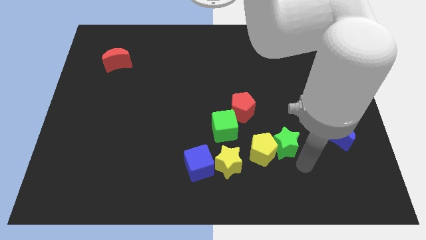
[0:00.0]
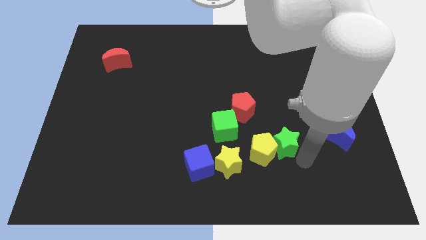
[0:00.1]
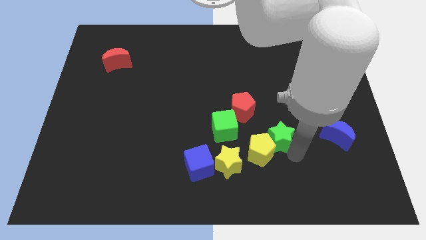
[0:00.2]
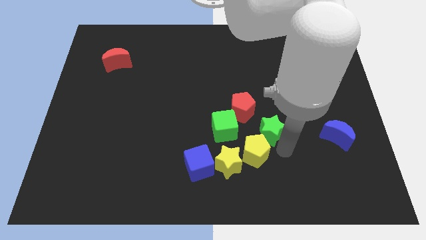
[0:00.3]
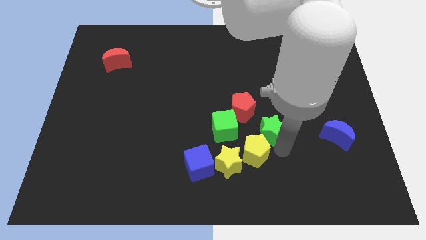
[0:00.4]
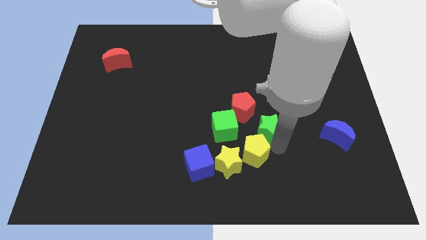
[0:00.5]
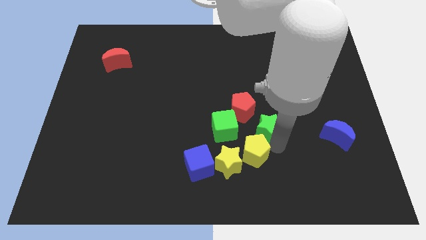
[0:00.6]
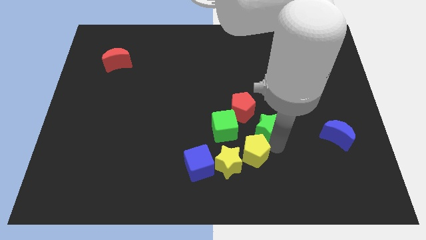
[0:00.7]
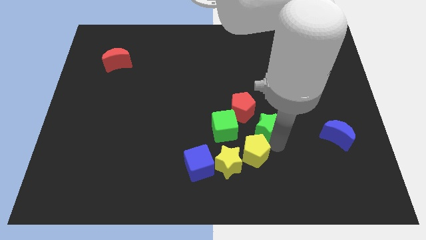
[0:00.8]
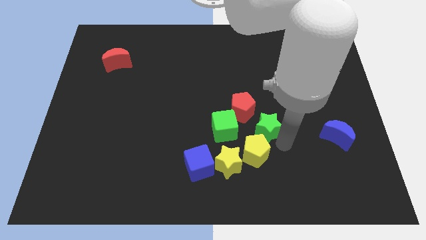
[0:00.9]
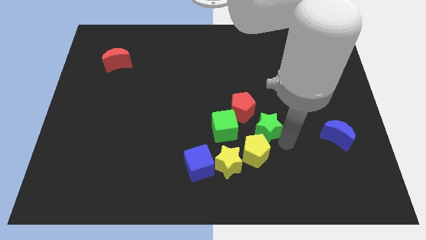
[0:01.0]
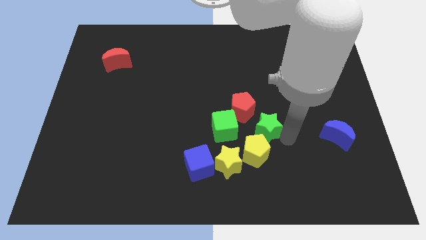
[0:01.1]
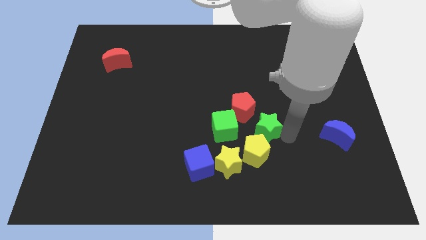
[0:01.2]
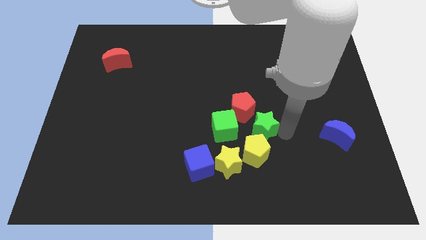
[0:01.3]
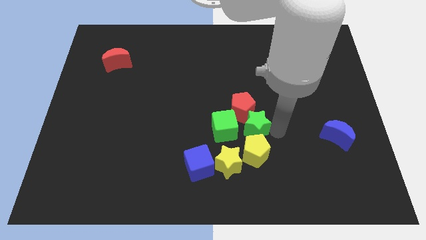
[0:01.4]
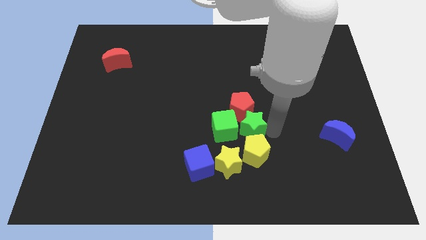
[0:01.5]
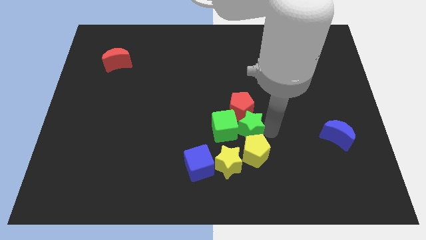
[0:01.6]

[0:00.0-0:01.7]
push the green star into red pentagon

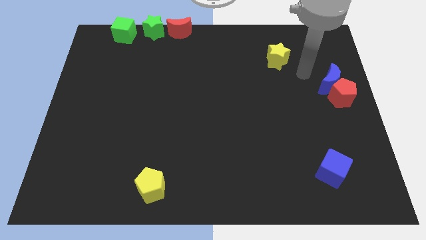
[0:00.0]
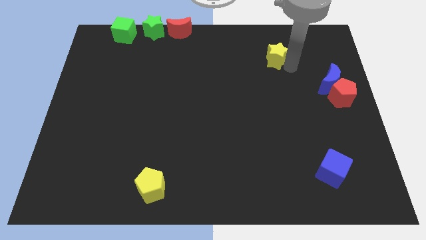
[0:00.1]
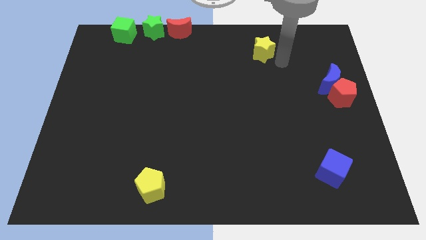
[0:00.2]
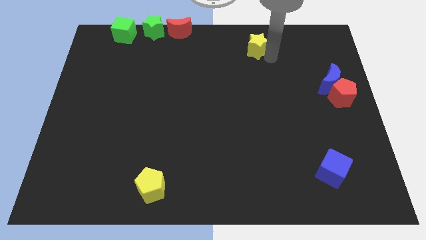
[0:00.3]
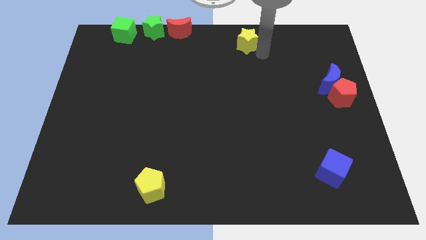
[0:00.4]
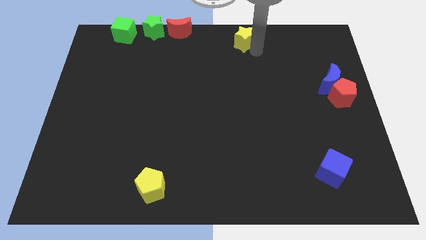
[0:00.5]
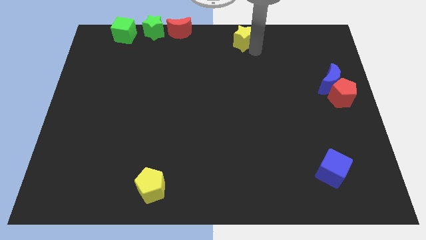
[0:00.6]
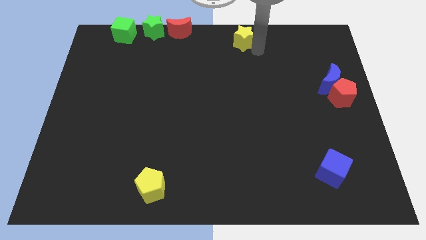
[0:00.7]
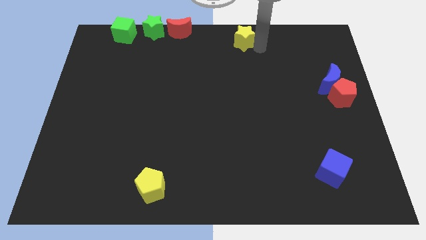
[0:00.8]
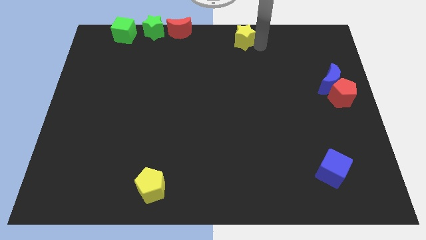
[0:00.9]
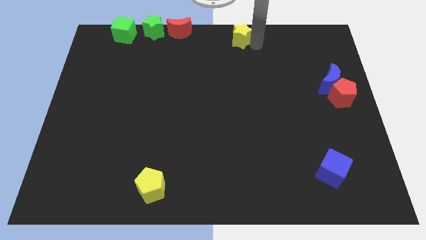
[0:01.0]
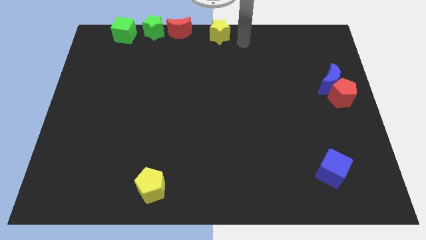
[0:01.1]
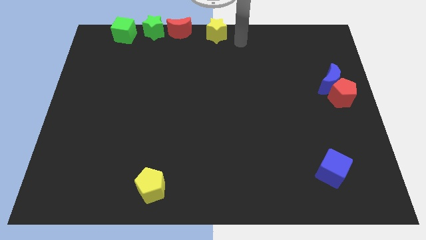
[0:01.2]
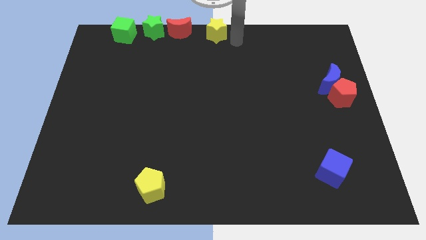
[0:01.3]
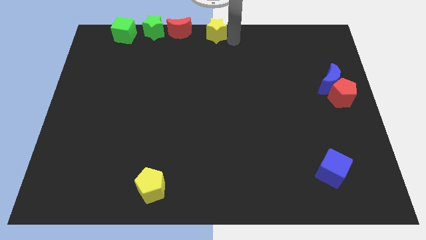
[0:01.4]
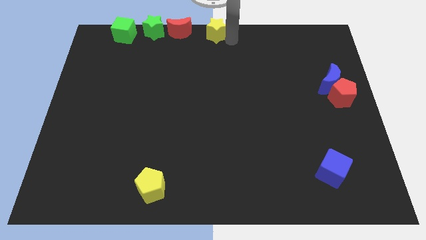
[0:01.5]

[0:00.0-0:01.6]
place the yellow star at top center of the board

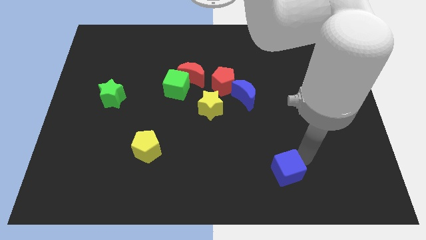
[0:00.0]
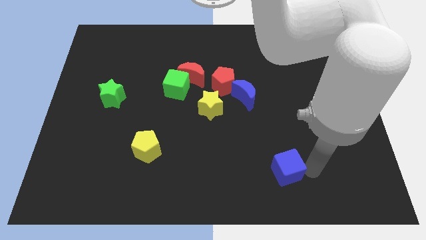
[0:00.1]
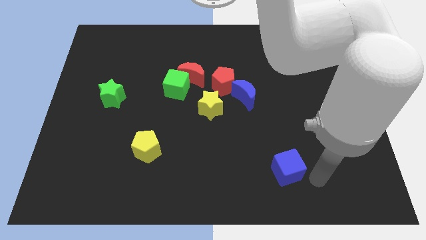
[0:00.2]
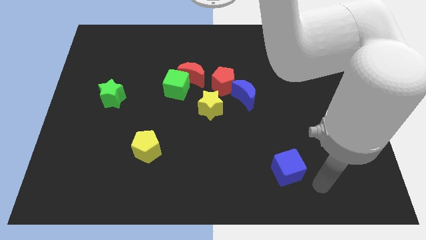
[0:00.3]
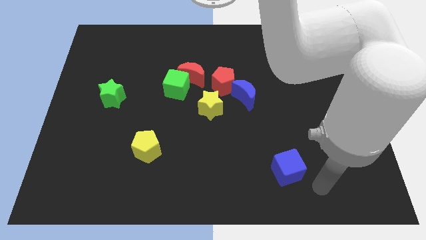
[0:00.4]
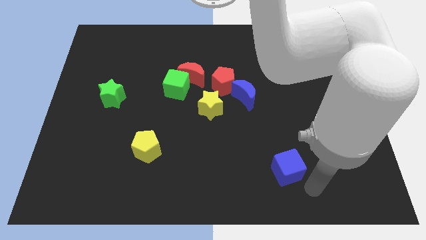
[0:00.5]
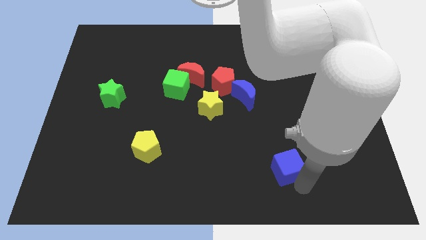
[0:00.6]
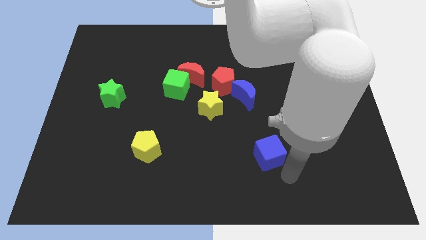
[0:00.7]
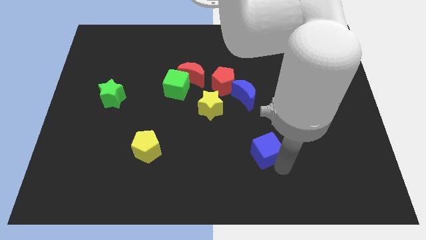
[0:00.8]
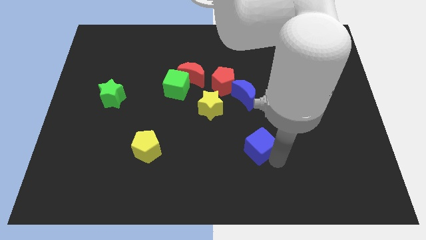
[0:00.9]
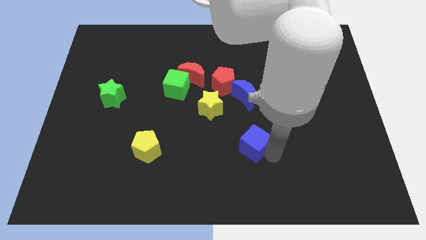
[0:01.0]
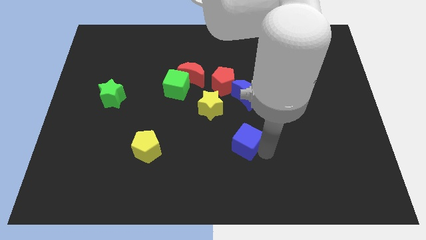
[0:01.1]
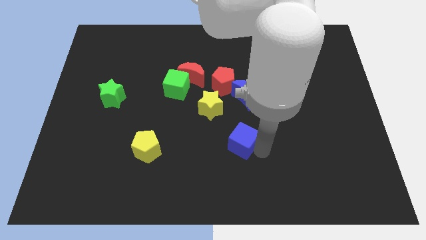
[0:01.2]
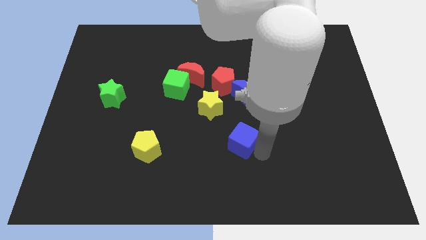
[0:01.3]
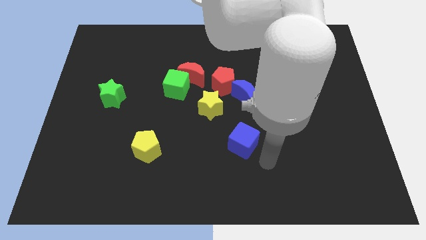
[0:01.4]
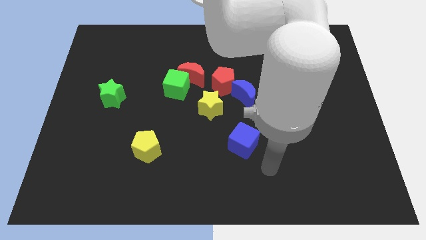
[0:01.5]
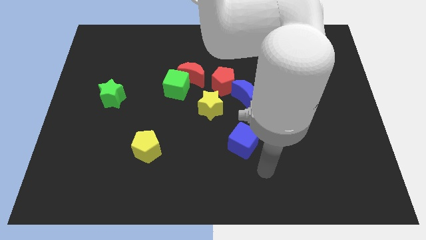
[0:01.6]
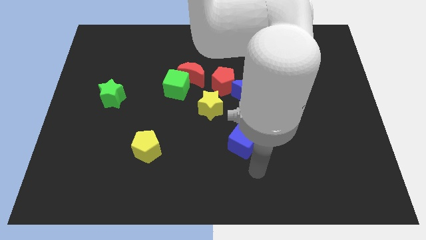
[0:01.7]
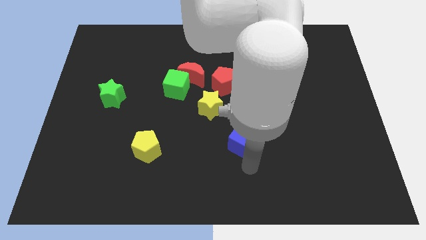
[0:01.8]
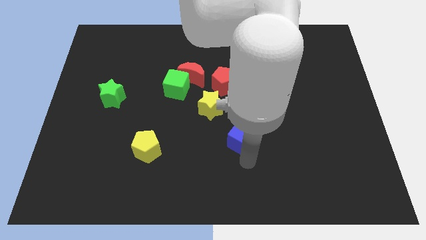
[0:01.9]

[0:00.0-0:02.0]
place the blue cube towards the yellow star

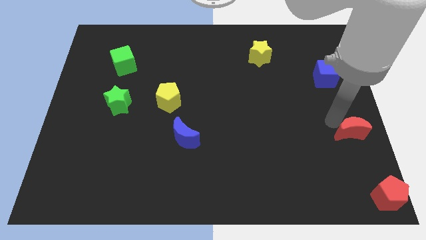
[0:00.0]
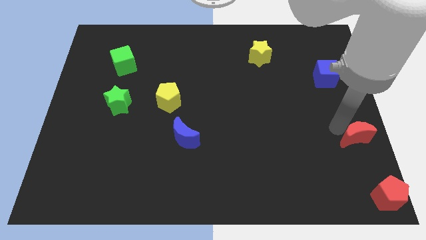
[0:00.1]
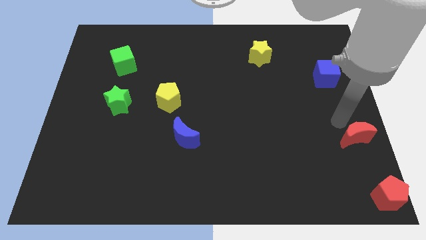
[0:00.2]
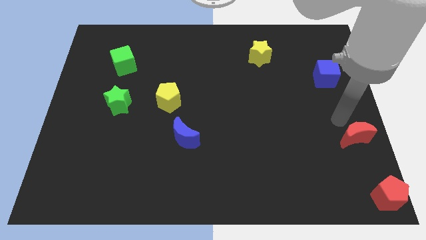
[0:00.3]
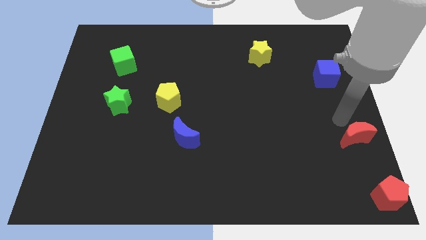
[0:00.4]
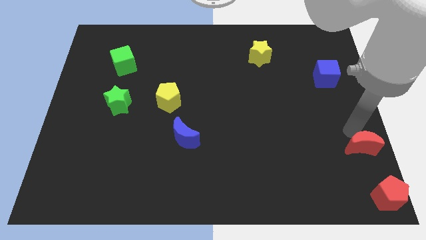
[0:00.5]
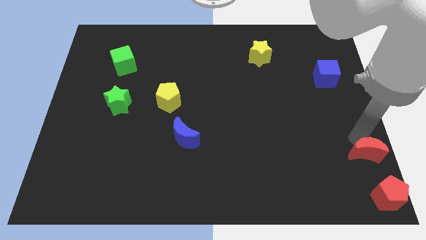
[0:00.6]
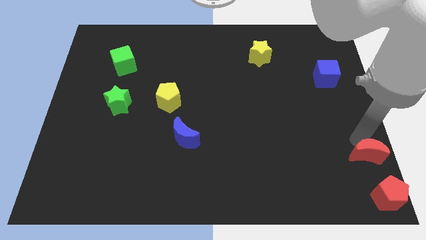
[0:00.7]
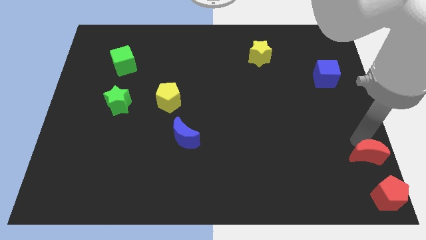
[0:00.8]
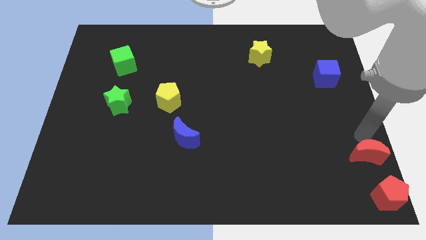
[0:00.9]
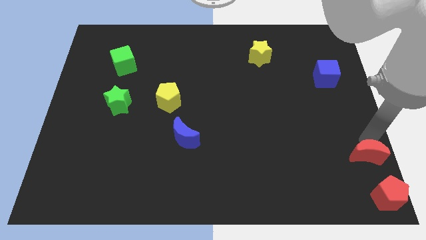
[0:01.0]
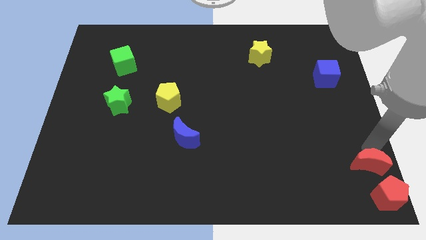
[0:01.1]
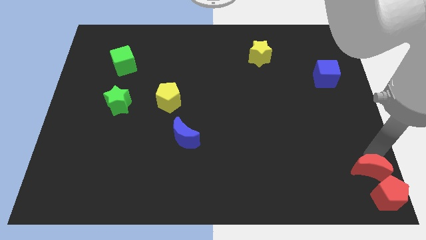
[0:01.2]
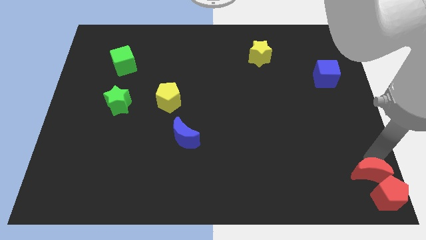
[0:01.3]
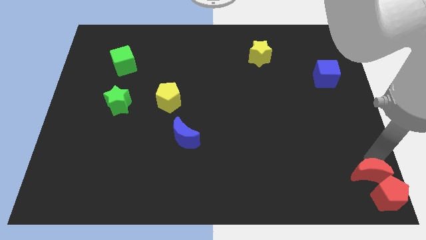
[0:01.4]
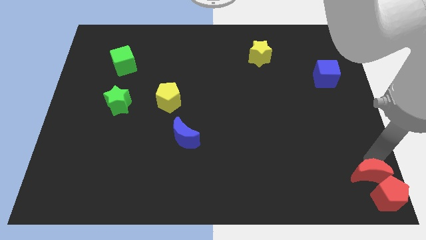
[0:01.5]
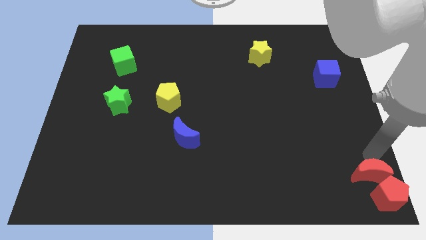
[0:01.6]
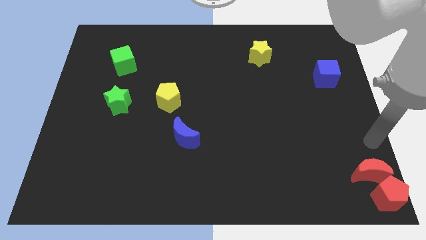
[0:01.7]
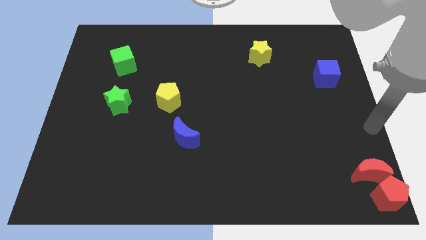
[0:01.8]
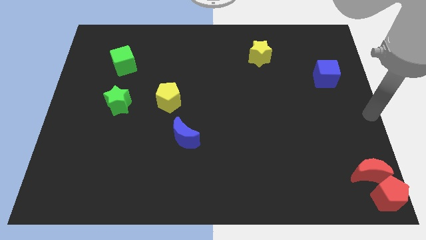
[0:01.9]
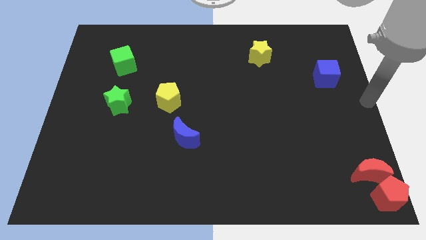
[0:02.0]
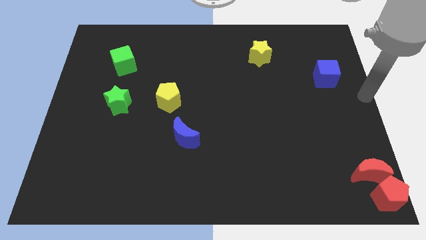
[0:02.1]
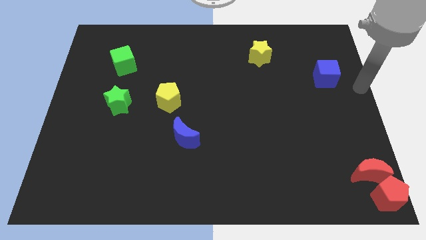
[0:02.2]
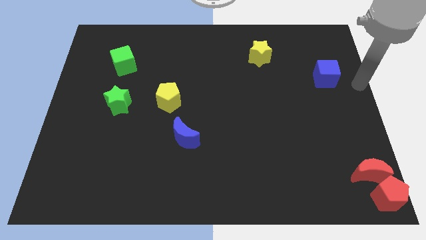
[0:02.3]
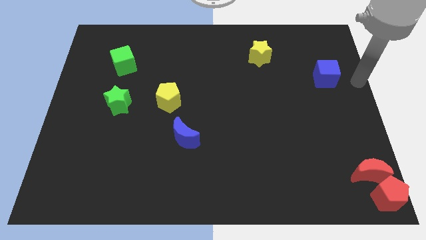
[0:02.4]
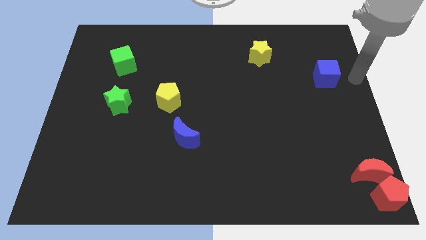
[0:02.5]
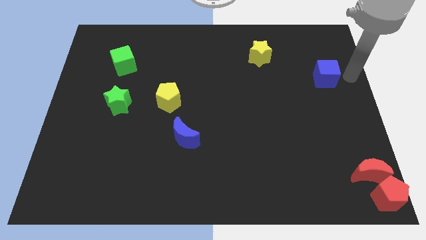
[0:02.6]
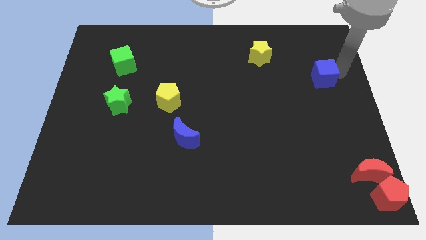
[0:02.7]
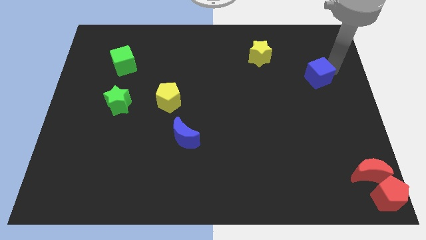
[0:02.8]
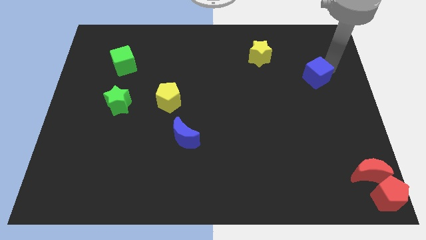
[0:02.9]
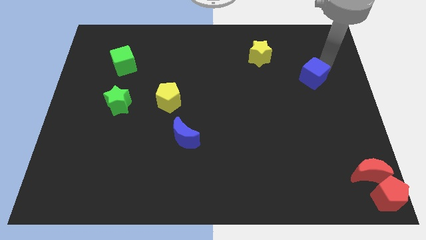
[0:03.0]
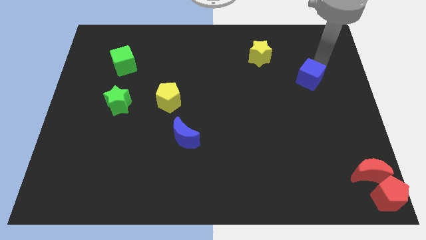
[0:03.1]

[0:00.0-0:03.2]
slightly move the blue cube to the bottom right side of the yellow star

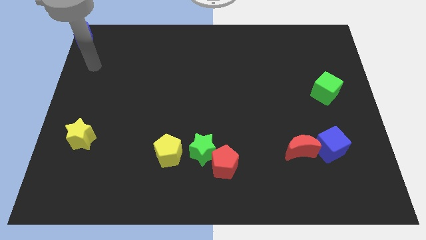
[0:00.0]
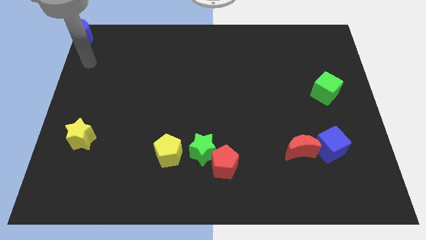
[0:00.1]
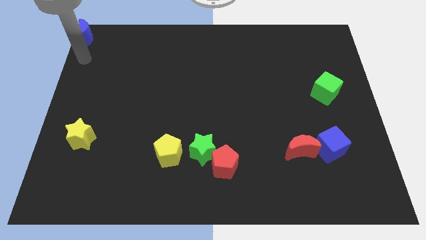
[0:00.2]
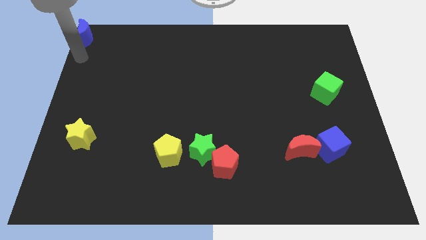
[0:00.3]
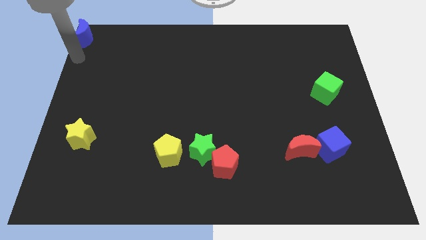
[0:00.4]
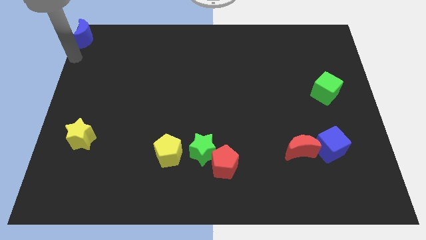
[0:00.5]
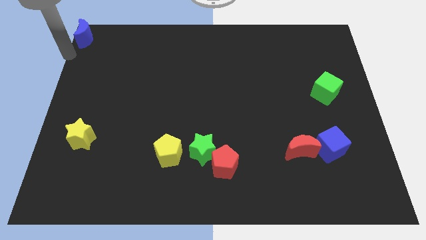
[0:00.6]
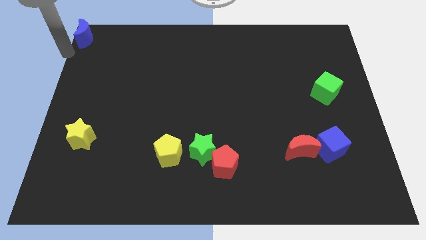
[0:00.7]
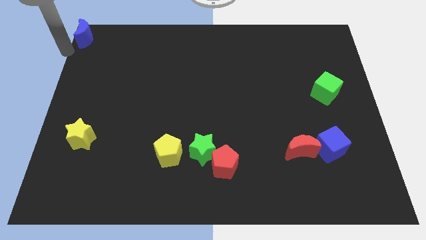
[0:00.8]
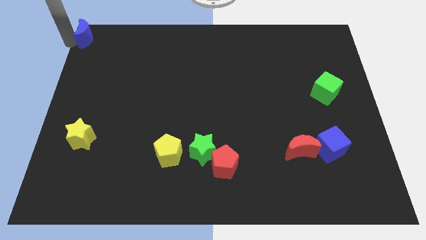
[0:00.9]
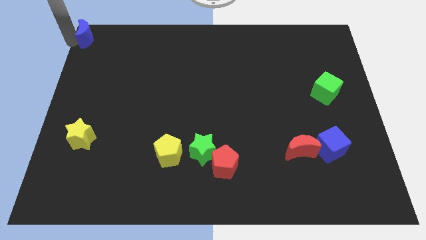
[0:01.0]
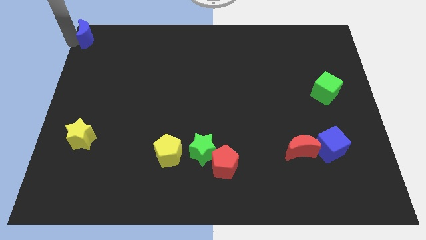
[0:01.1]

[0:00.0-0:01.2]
move the arm towards the blue moon
